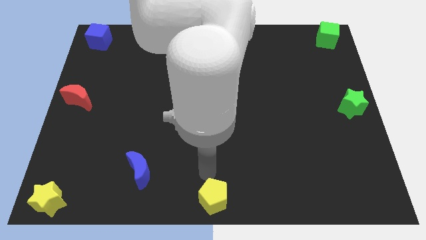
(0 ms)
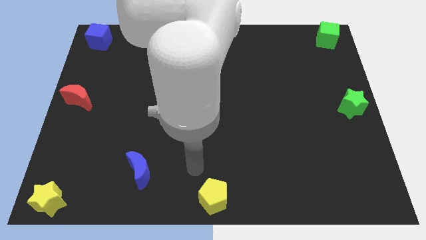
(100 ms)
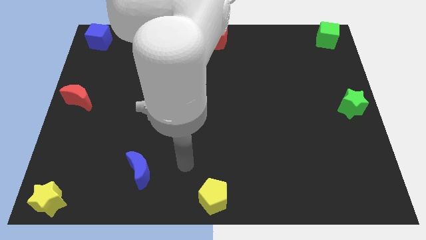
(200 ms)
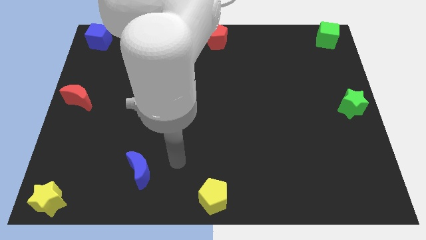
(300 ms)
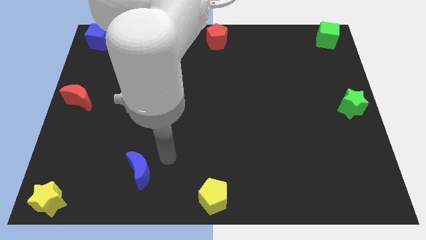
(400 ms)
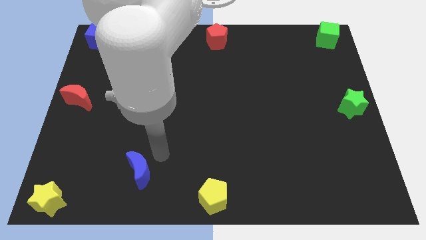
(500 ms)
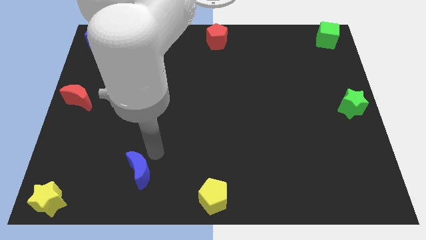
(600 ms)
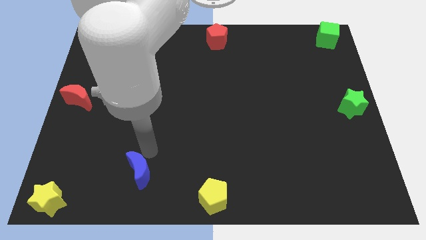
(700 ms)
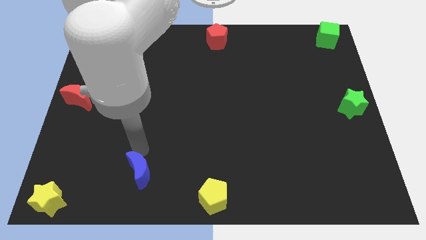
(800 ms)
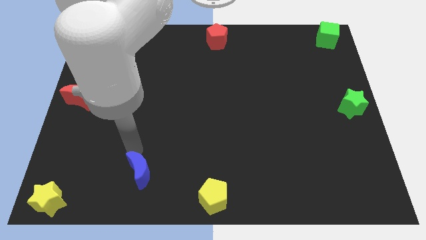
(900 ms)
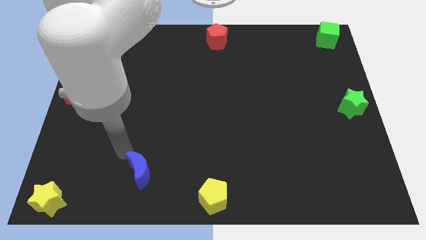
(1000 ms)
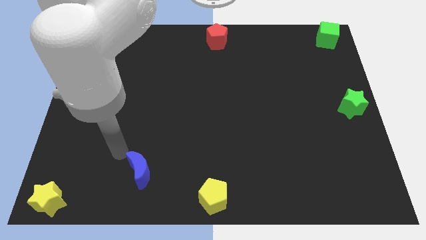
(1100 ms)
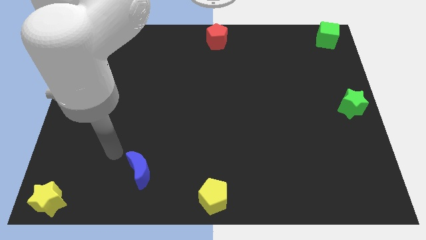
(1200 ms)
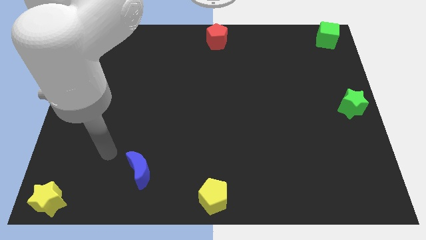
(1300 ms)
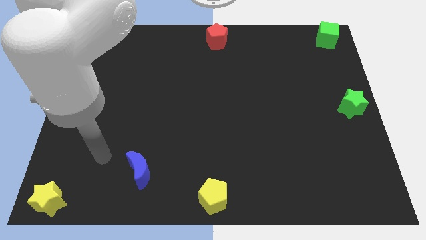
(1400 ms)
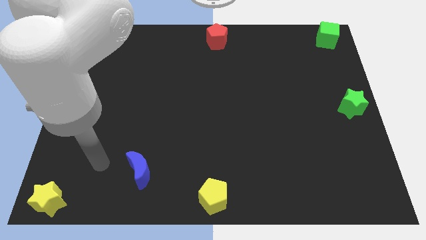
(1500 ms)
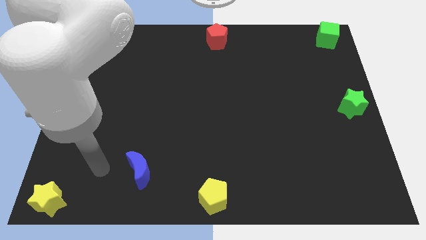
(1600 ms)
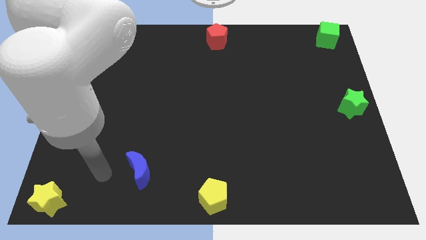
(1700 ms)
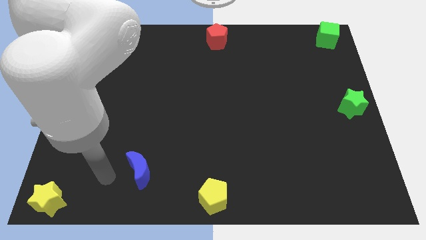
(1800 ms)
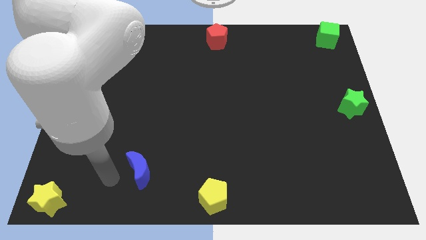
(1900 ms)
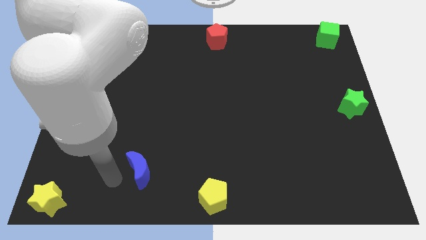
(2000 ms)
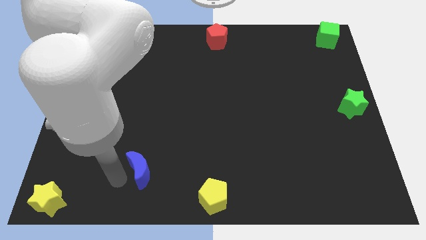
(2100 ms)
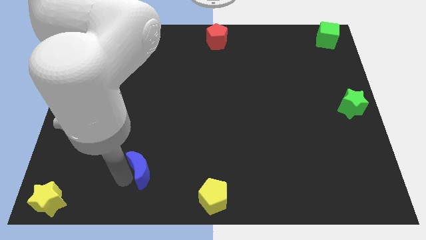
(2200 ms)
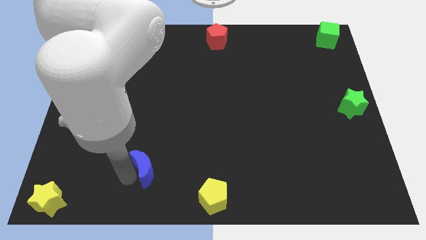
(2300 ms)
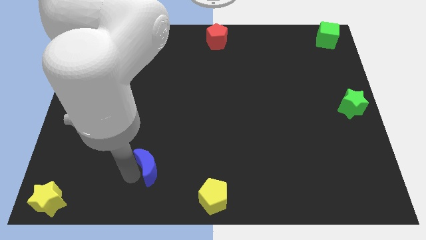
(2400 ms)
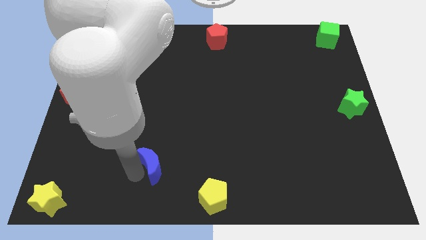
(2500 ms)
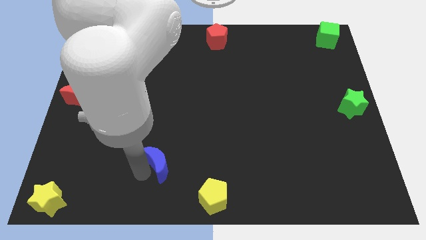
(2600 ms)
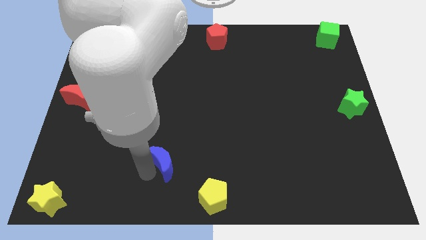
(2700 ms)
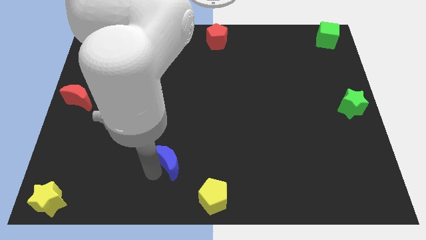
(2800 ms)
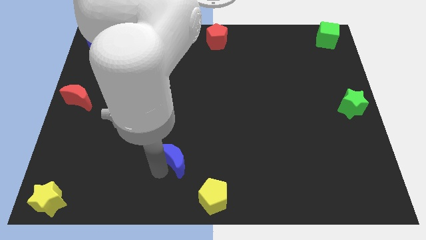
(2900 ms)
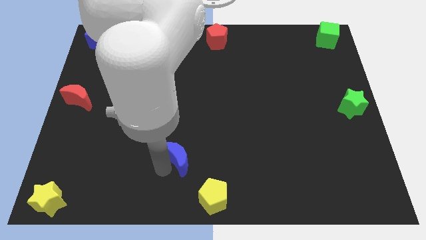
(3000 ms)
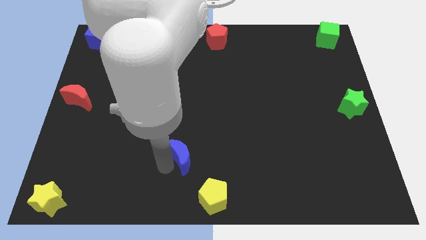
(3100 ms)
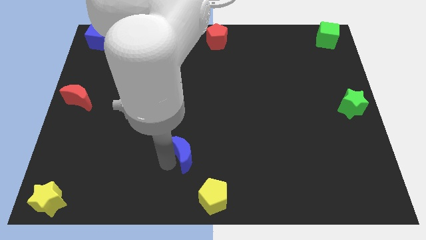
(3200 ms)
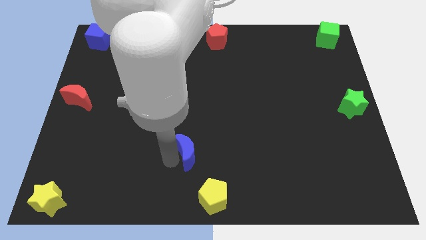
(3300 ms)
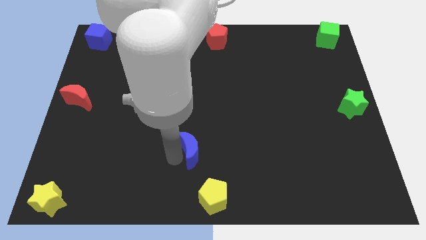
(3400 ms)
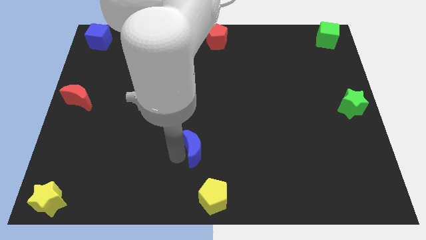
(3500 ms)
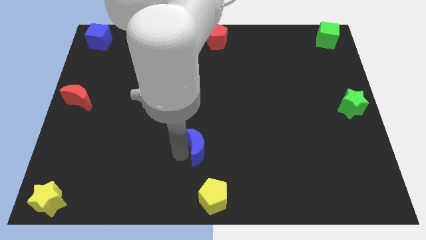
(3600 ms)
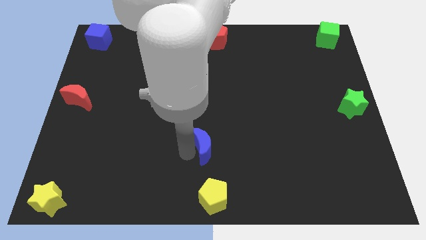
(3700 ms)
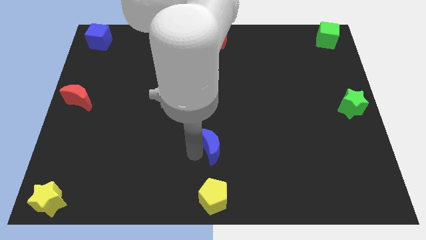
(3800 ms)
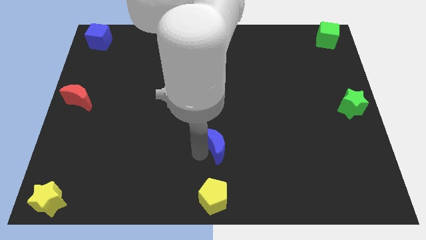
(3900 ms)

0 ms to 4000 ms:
place the blue moon on the top of the yellow pentagon

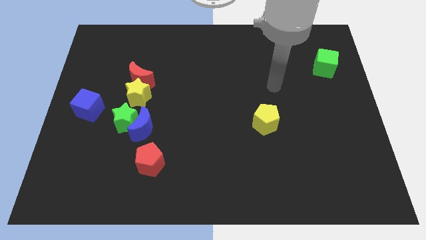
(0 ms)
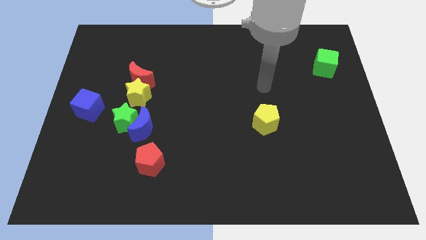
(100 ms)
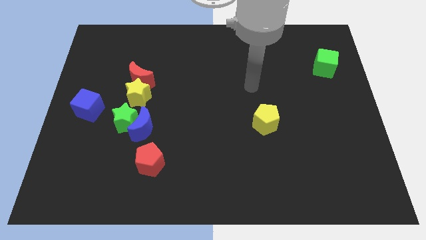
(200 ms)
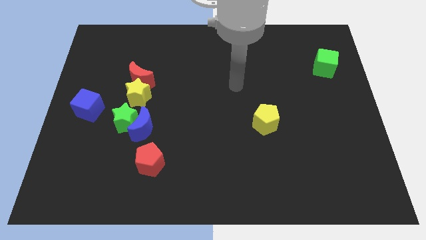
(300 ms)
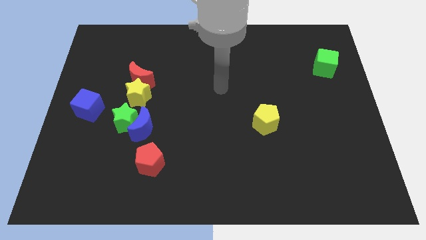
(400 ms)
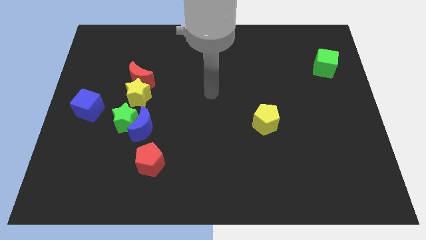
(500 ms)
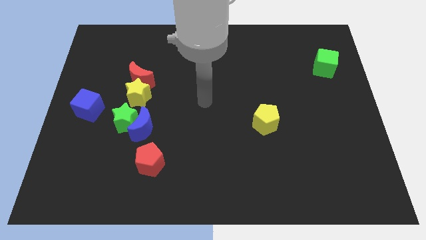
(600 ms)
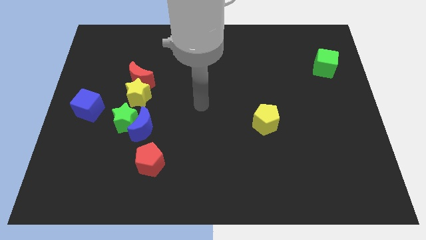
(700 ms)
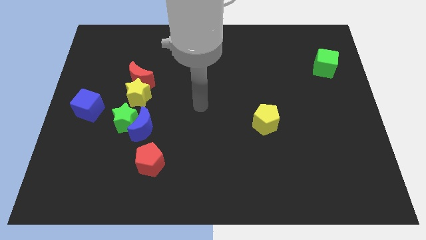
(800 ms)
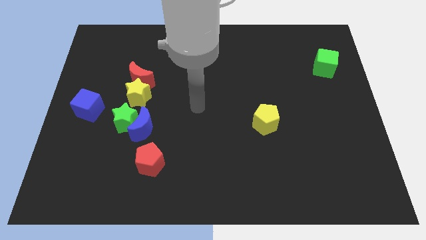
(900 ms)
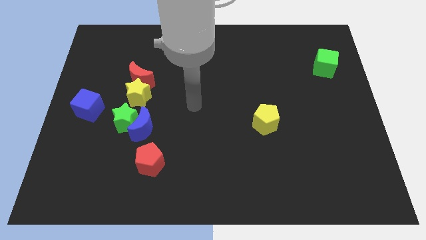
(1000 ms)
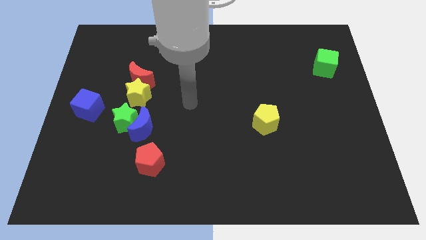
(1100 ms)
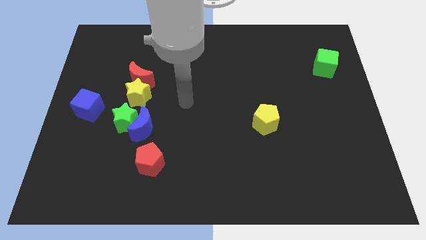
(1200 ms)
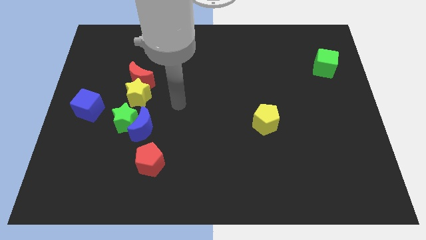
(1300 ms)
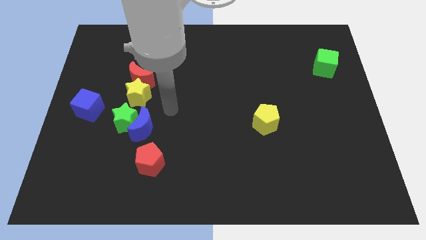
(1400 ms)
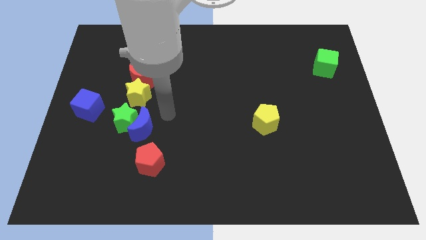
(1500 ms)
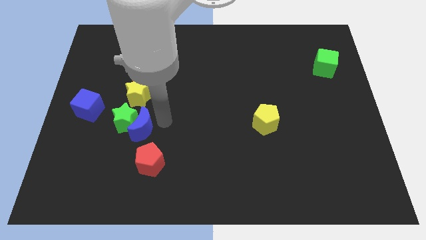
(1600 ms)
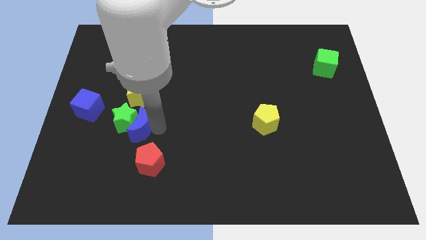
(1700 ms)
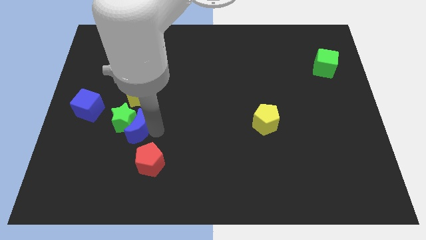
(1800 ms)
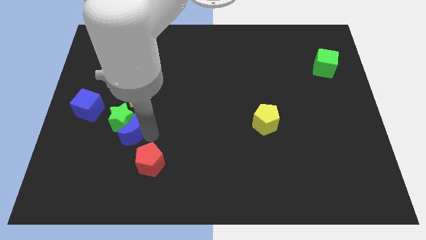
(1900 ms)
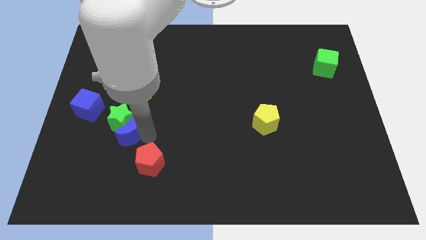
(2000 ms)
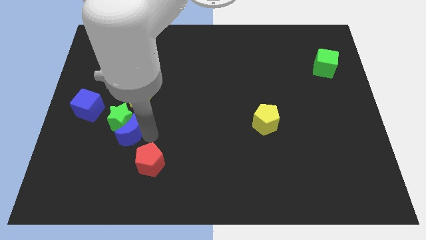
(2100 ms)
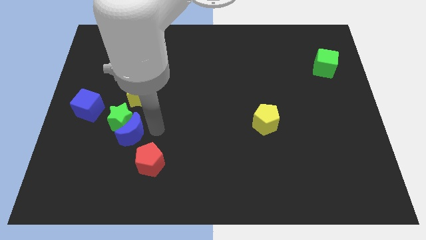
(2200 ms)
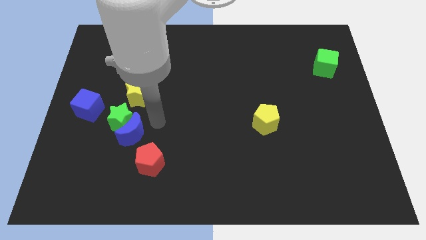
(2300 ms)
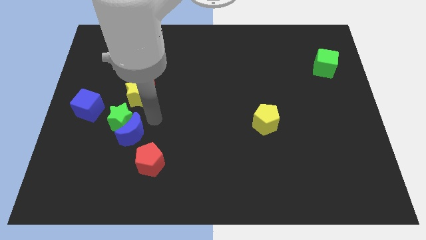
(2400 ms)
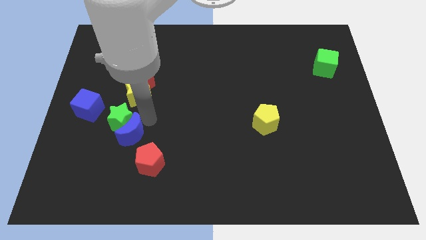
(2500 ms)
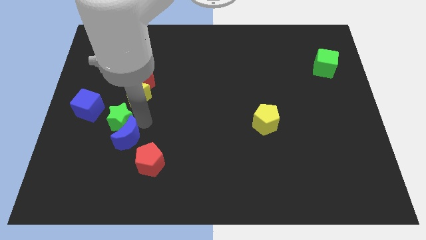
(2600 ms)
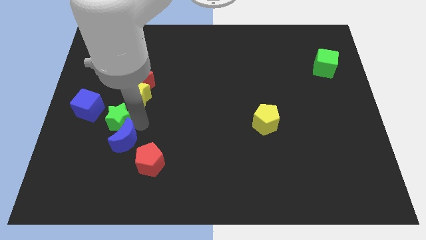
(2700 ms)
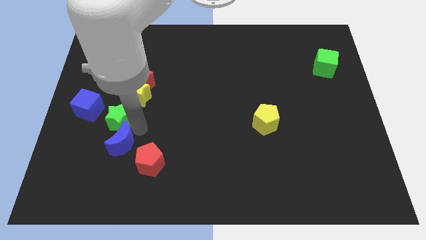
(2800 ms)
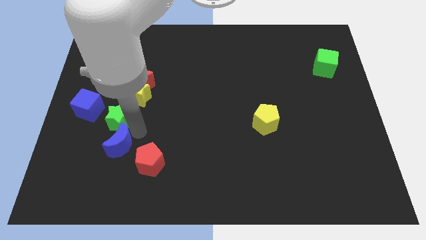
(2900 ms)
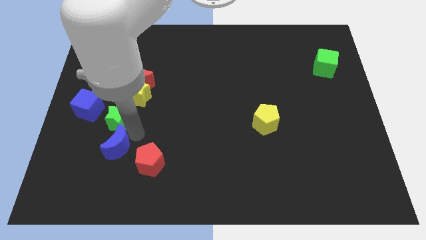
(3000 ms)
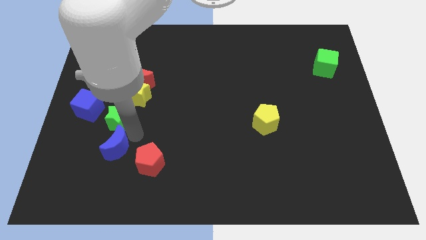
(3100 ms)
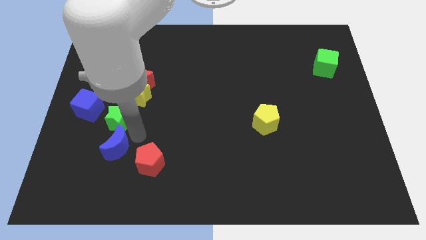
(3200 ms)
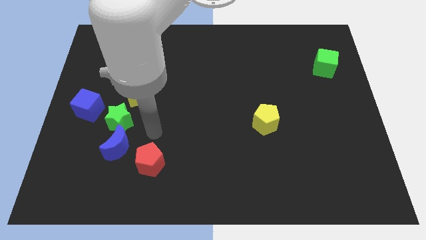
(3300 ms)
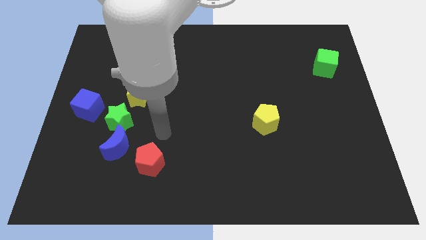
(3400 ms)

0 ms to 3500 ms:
move the blue moon to left side of the green star

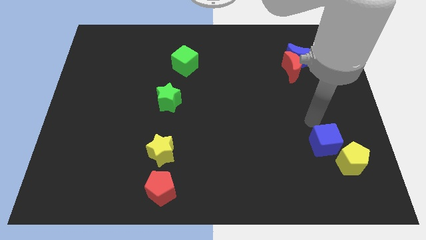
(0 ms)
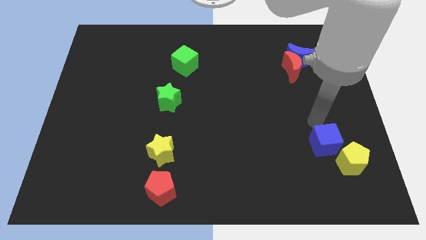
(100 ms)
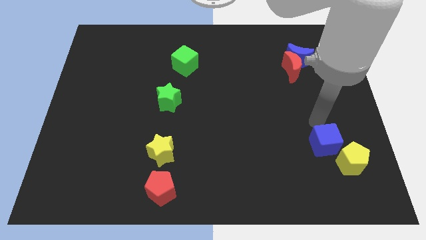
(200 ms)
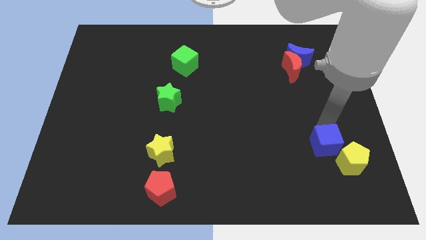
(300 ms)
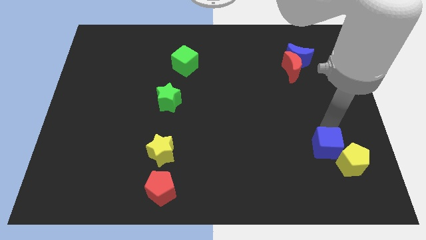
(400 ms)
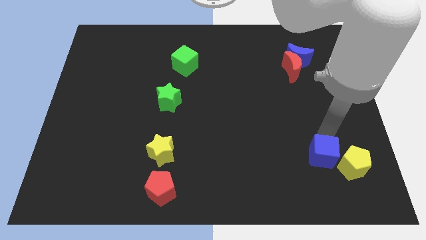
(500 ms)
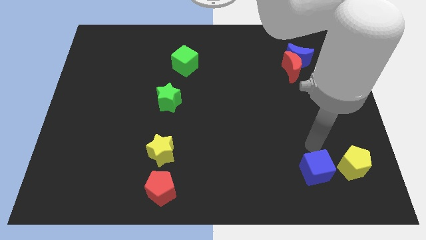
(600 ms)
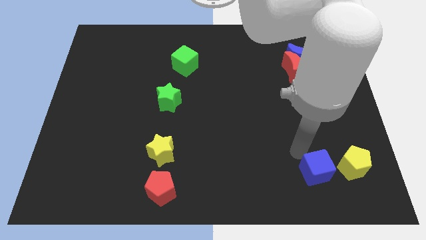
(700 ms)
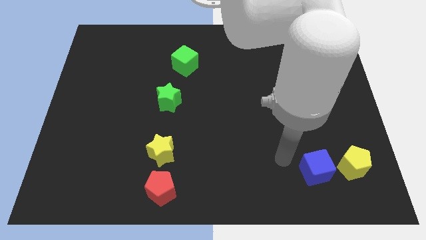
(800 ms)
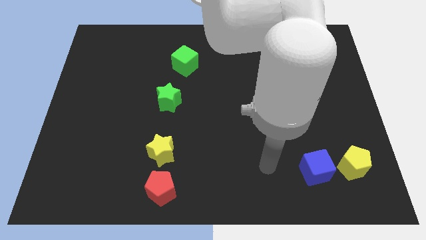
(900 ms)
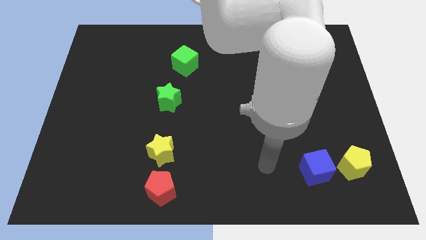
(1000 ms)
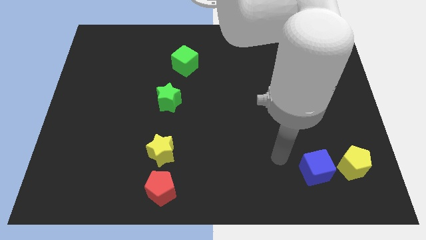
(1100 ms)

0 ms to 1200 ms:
place blue cube to the left of yellow pentagon

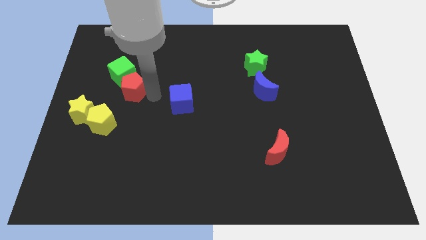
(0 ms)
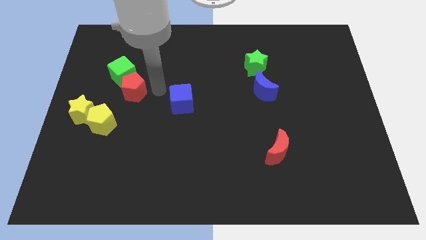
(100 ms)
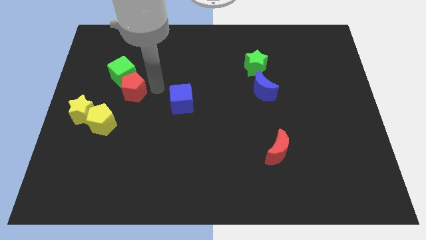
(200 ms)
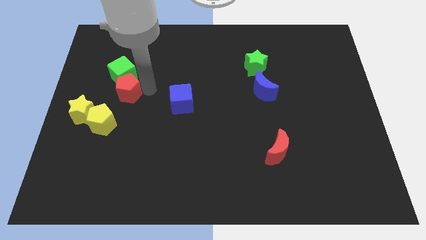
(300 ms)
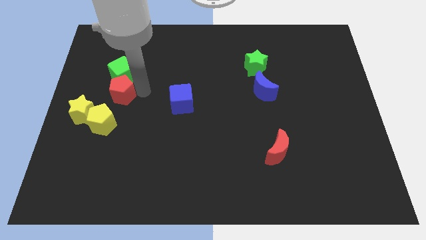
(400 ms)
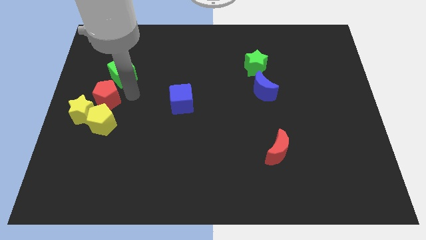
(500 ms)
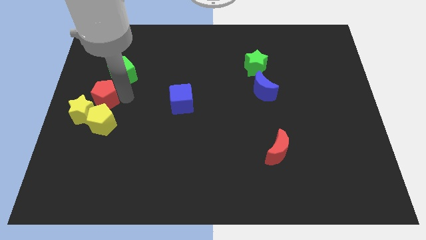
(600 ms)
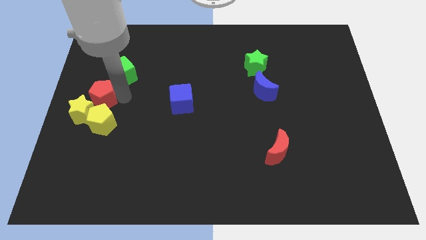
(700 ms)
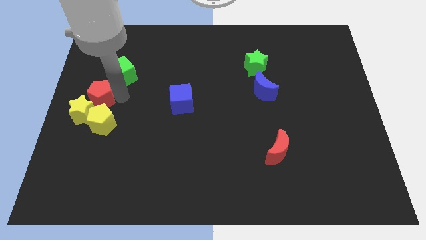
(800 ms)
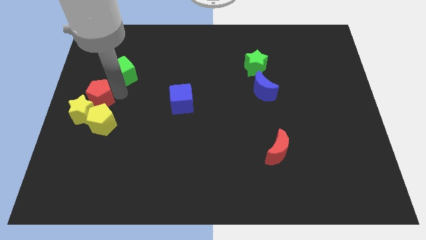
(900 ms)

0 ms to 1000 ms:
place red pentagon above yellow pentagon
